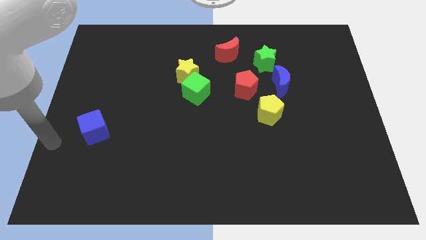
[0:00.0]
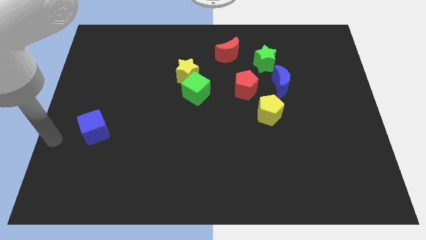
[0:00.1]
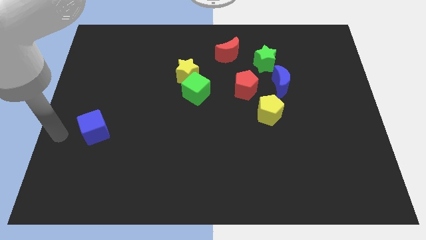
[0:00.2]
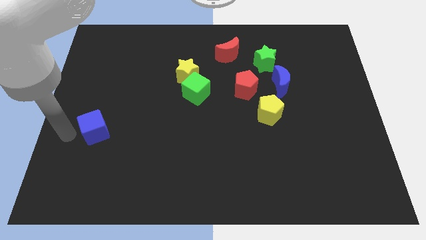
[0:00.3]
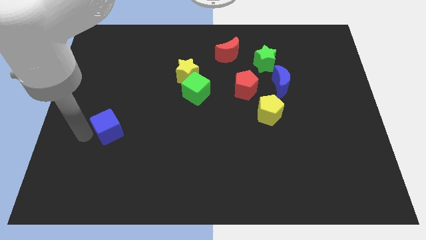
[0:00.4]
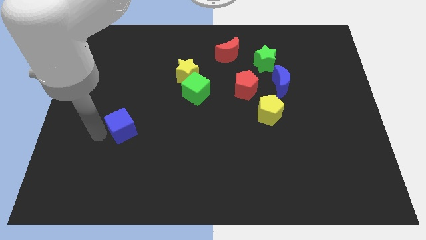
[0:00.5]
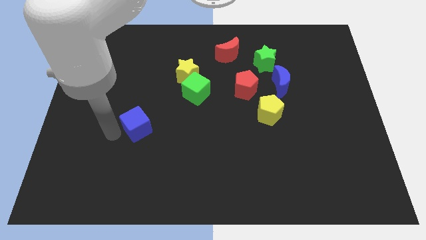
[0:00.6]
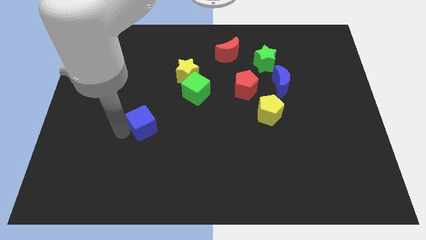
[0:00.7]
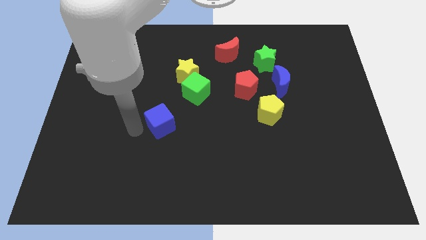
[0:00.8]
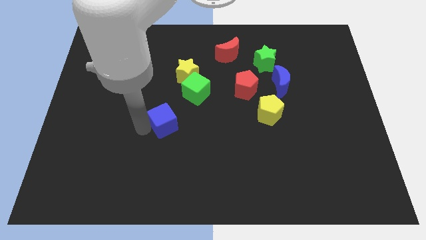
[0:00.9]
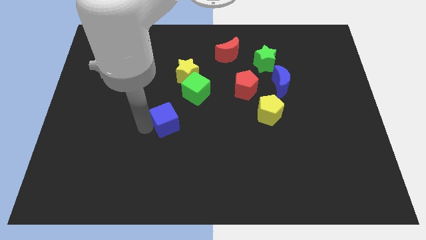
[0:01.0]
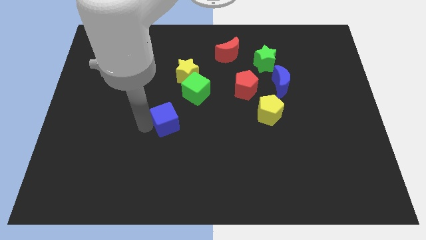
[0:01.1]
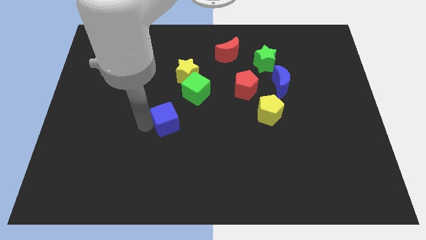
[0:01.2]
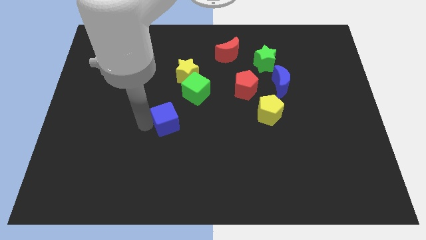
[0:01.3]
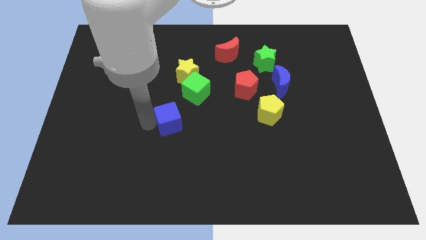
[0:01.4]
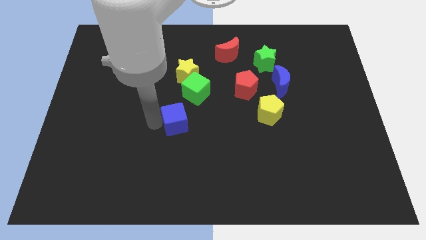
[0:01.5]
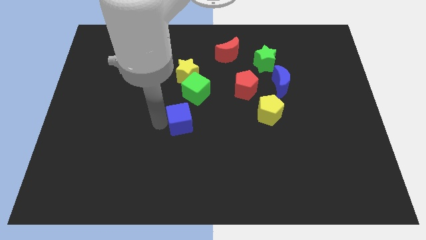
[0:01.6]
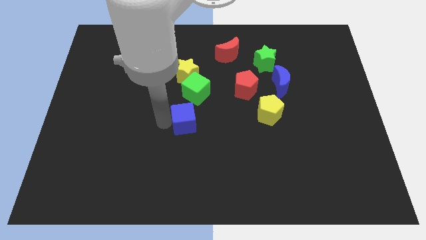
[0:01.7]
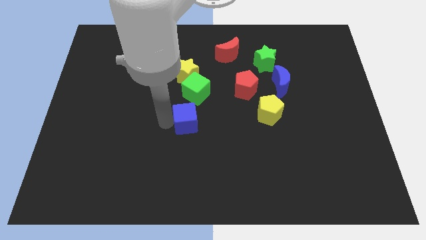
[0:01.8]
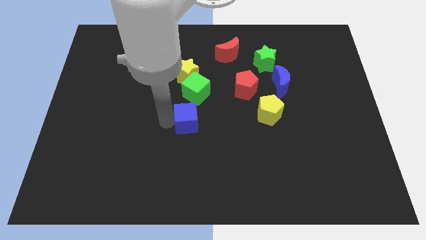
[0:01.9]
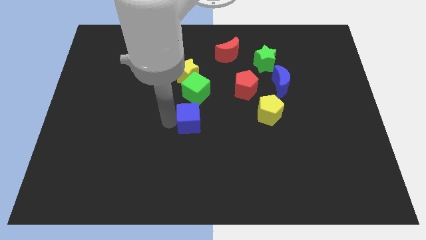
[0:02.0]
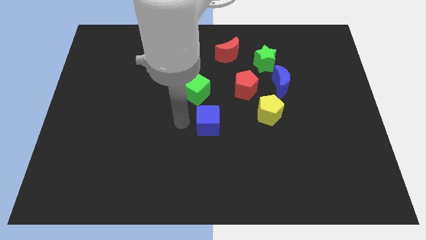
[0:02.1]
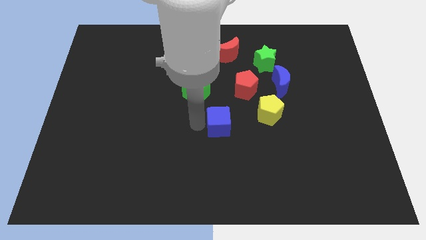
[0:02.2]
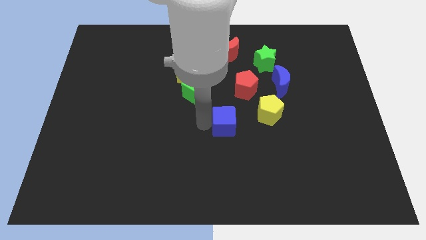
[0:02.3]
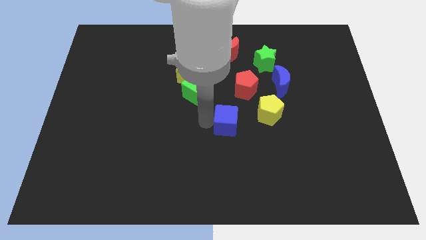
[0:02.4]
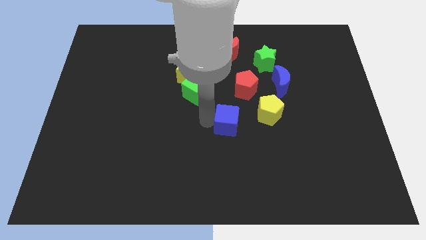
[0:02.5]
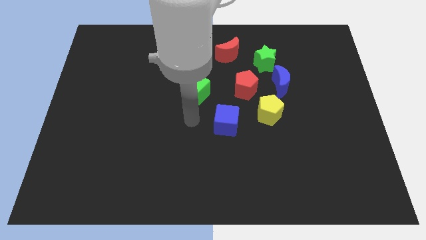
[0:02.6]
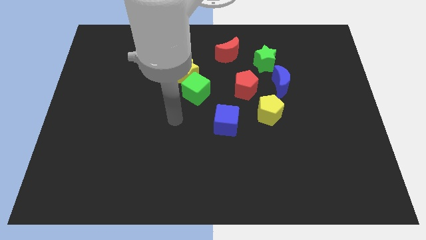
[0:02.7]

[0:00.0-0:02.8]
move the blue cube diagonal below the red pentagon

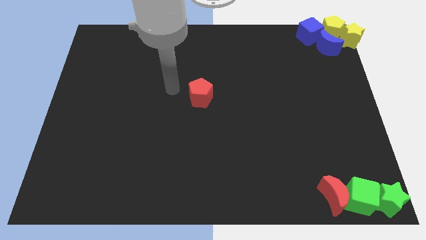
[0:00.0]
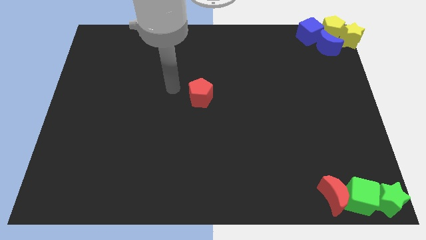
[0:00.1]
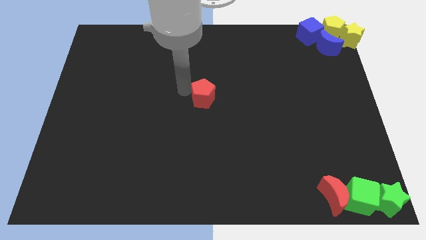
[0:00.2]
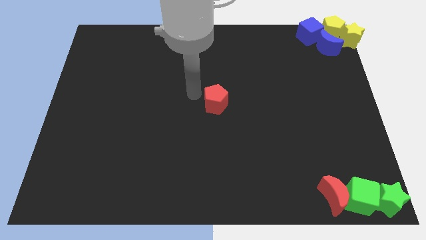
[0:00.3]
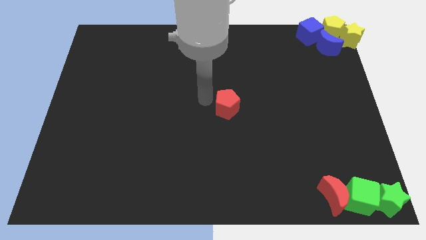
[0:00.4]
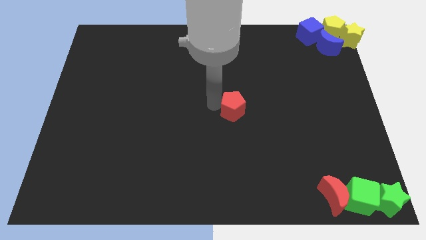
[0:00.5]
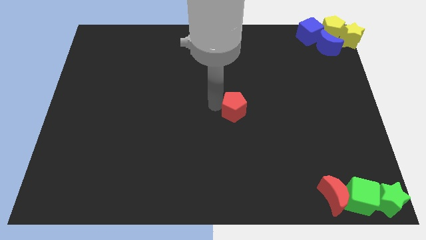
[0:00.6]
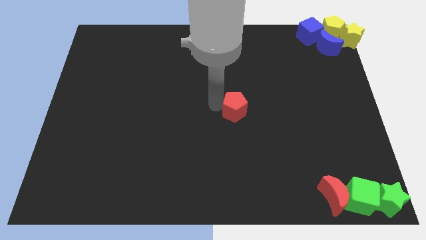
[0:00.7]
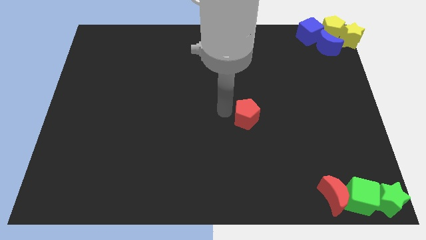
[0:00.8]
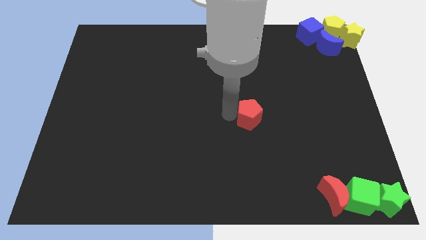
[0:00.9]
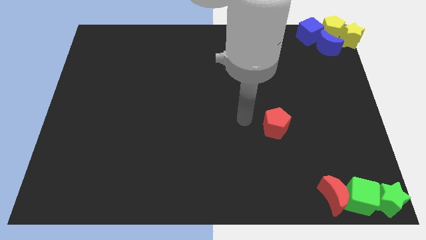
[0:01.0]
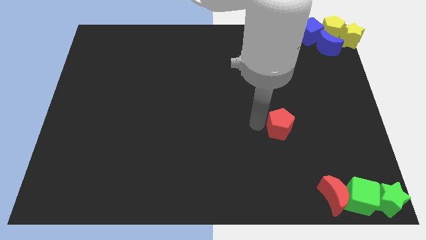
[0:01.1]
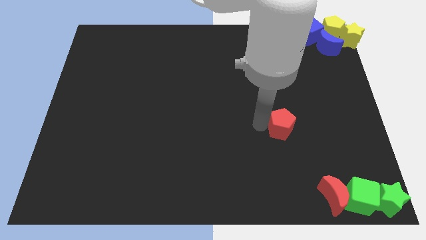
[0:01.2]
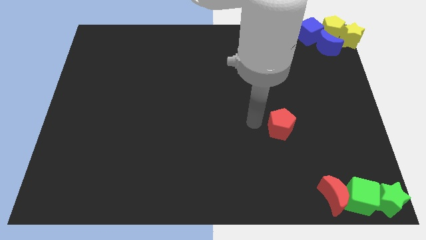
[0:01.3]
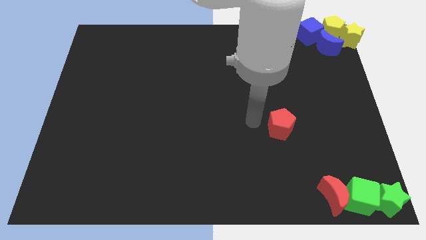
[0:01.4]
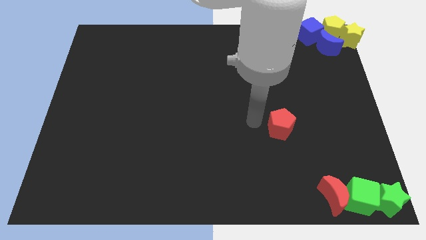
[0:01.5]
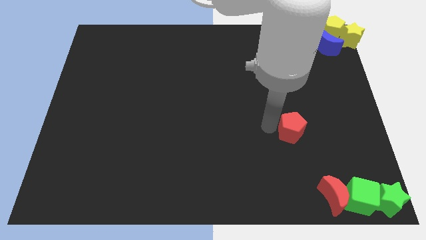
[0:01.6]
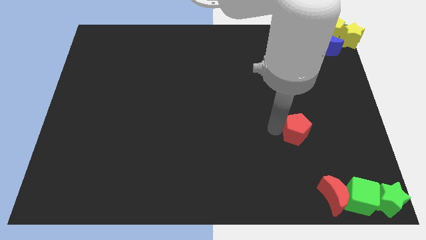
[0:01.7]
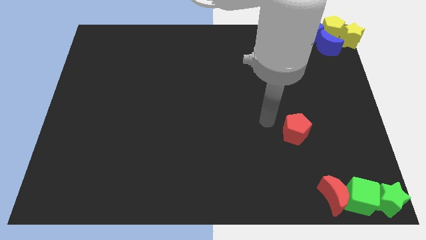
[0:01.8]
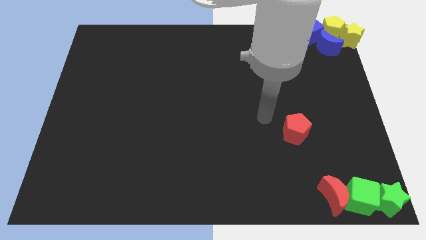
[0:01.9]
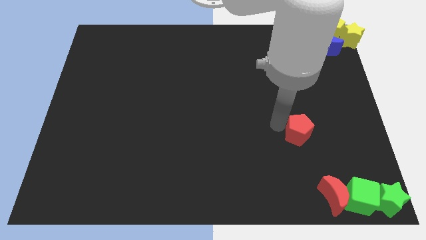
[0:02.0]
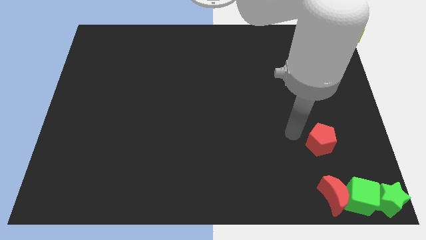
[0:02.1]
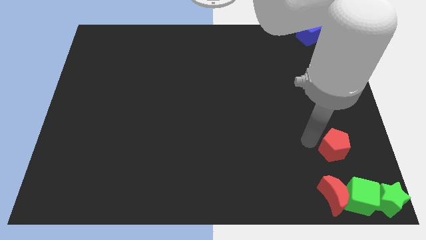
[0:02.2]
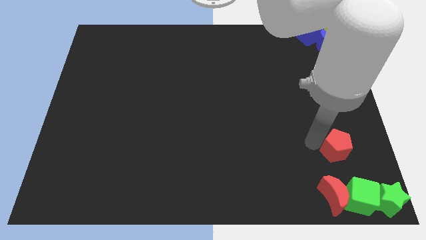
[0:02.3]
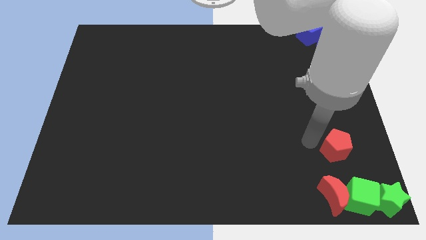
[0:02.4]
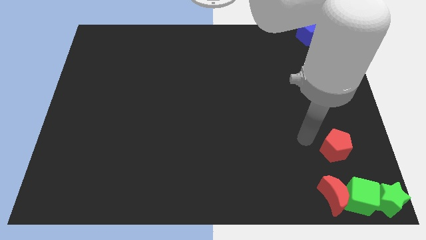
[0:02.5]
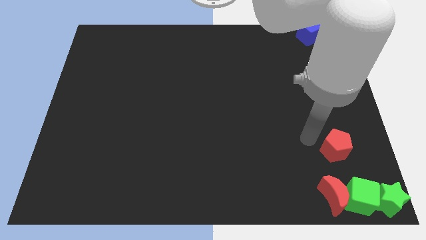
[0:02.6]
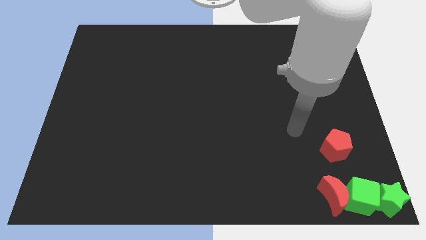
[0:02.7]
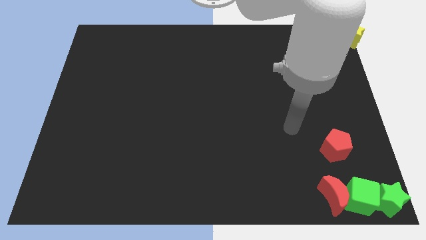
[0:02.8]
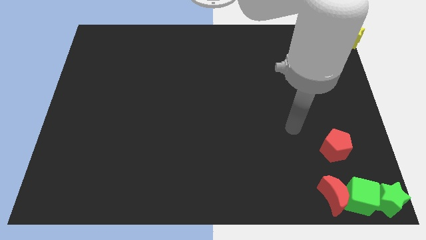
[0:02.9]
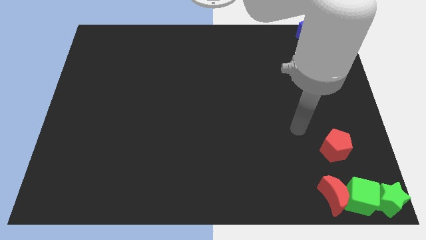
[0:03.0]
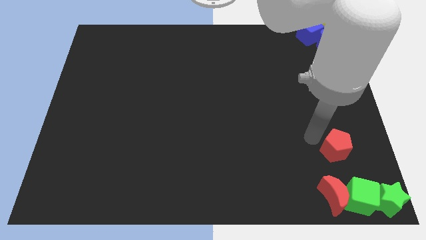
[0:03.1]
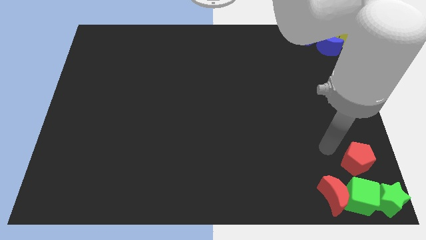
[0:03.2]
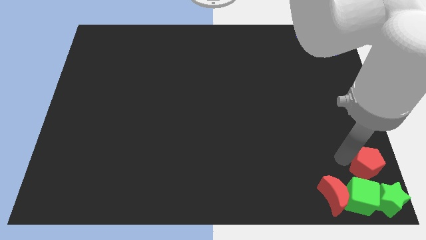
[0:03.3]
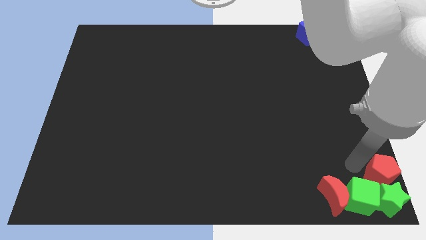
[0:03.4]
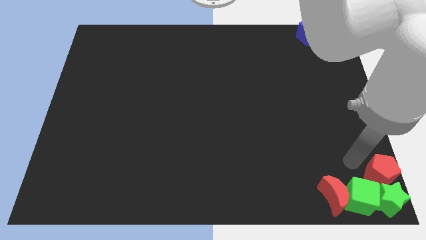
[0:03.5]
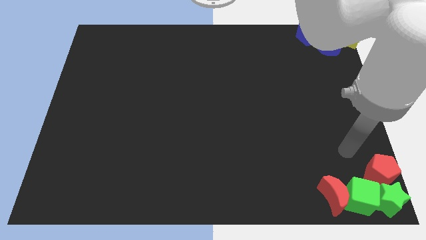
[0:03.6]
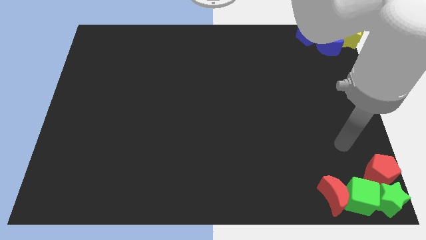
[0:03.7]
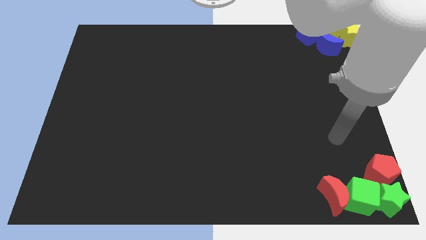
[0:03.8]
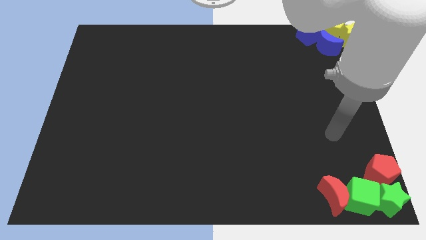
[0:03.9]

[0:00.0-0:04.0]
place the red pentagon on top of the green star

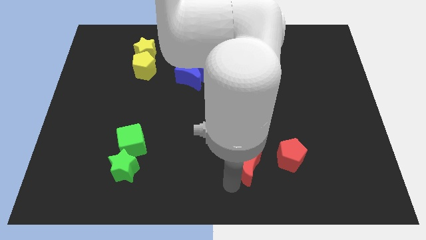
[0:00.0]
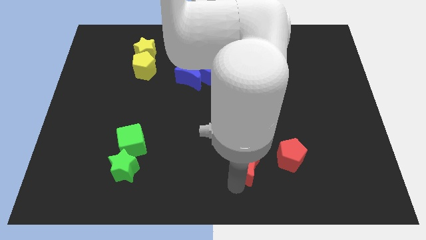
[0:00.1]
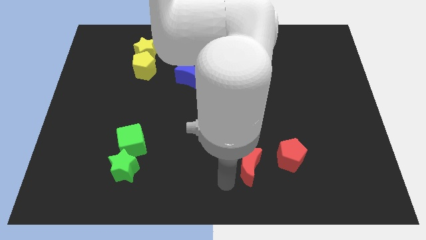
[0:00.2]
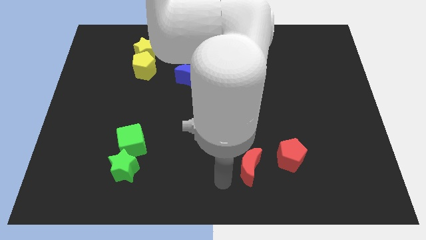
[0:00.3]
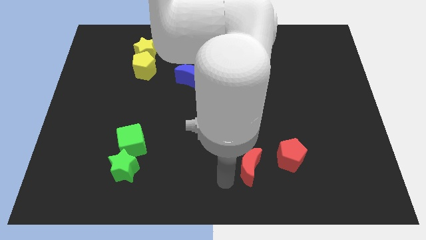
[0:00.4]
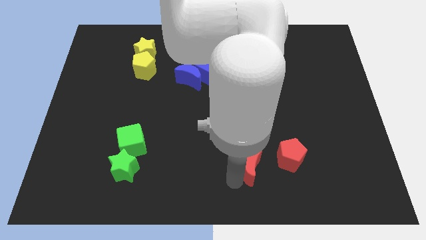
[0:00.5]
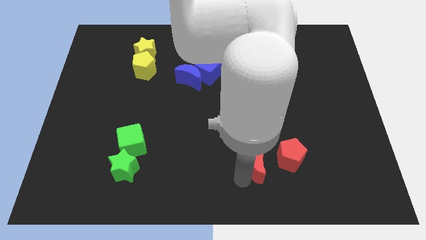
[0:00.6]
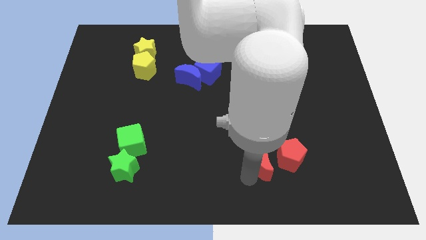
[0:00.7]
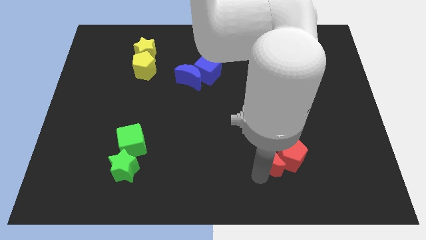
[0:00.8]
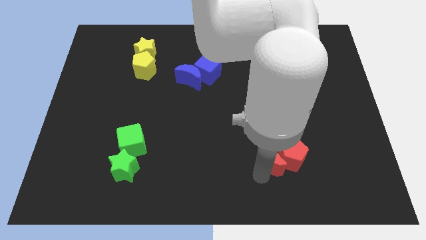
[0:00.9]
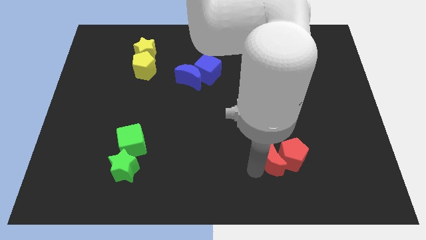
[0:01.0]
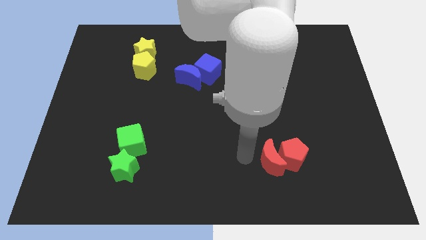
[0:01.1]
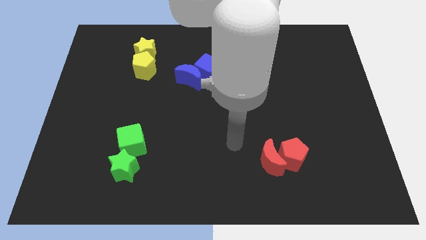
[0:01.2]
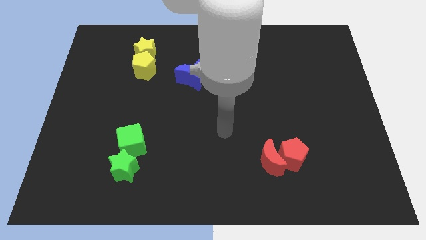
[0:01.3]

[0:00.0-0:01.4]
slide the red moon into the red pentagon

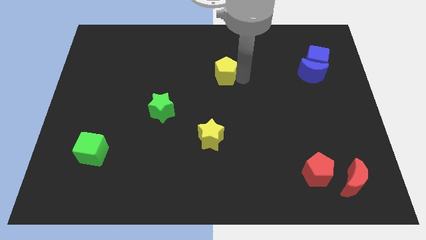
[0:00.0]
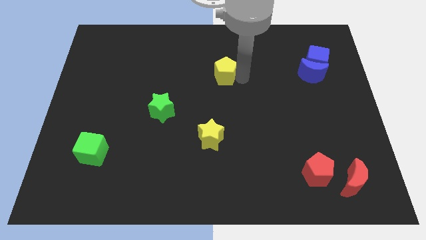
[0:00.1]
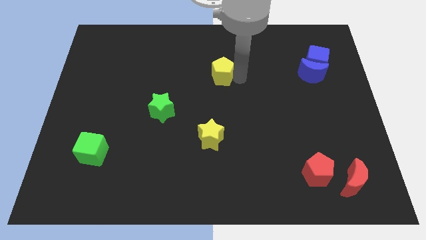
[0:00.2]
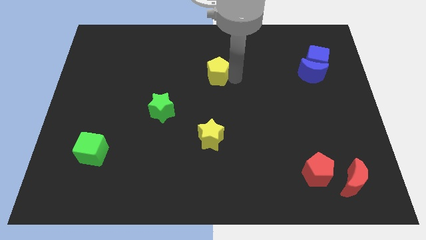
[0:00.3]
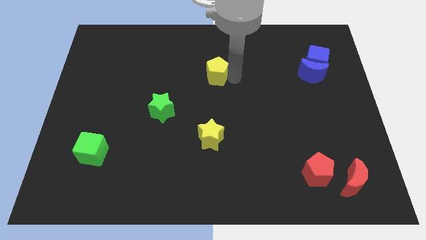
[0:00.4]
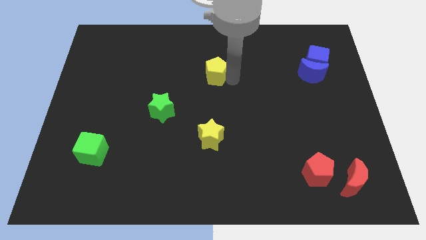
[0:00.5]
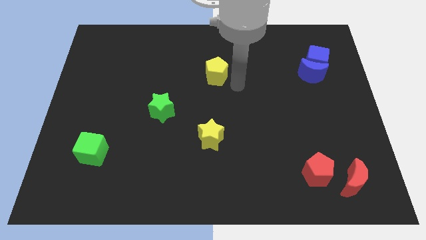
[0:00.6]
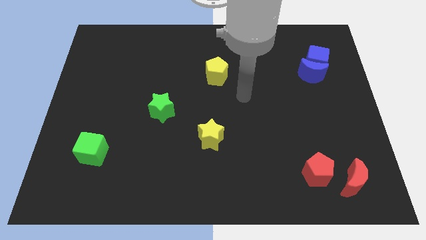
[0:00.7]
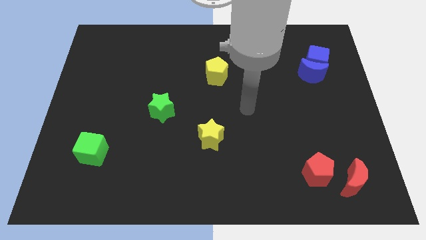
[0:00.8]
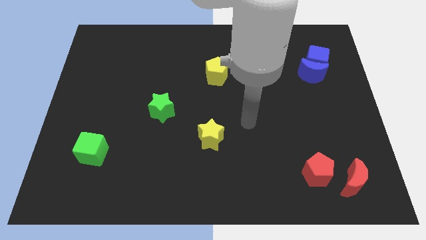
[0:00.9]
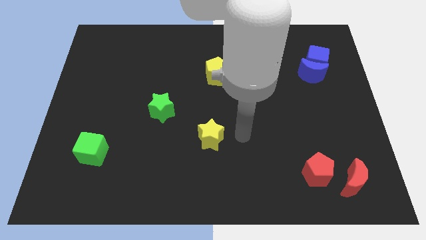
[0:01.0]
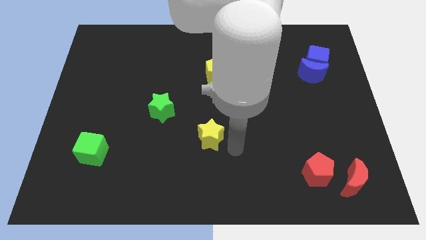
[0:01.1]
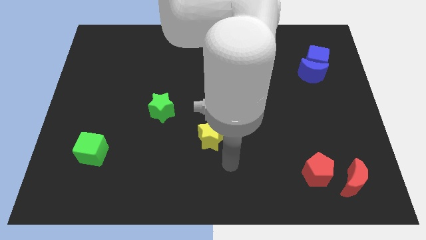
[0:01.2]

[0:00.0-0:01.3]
place the yellow pentagon vertically above the yellow star
